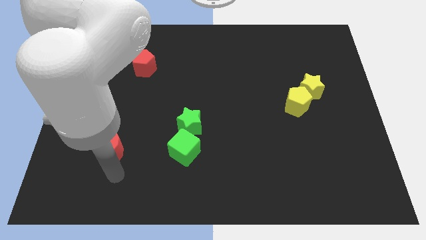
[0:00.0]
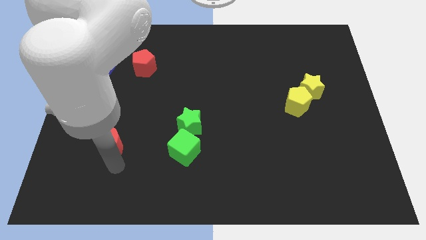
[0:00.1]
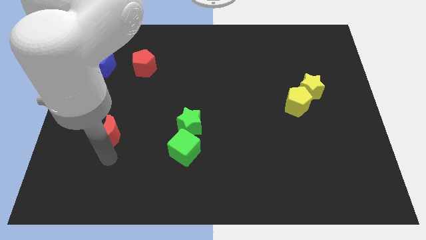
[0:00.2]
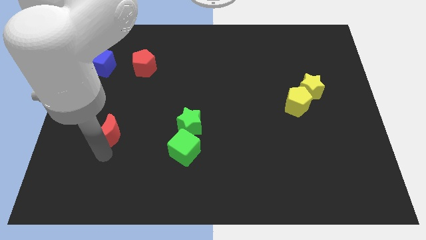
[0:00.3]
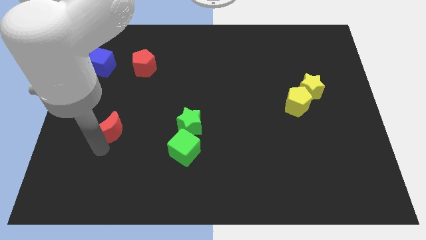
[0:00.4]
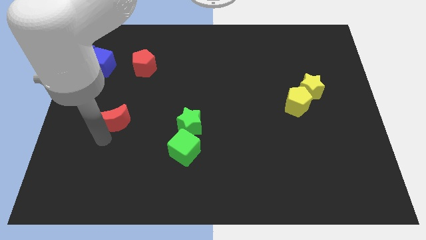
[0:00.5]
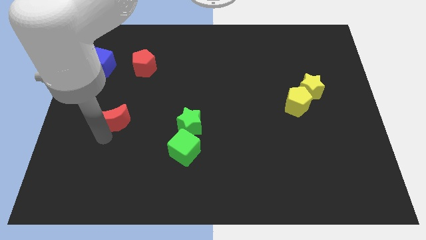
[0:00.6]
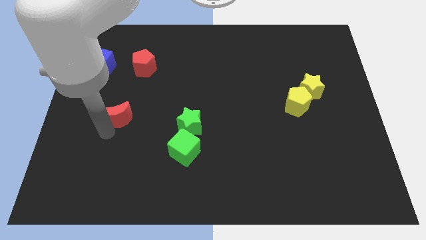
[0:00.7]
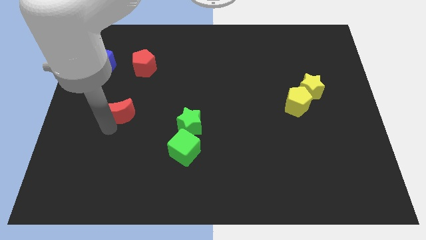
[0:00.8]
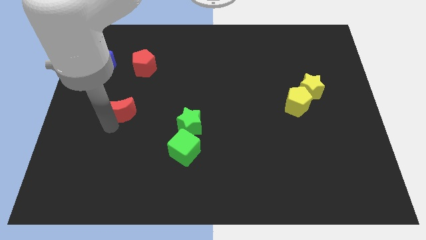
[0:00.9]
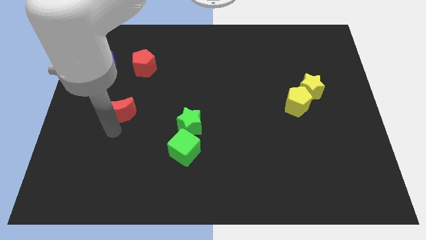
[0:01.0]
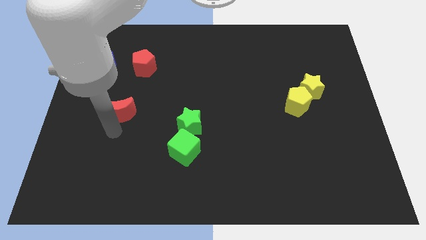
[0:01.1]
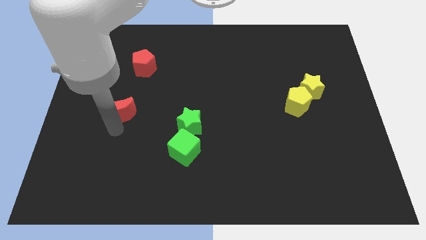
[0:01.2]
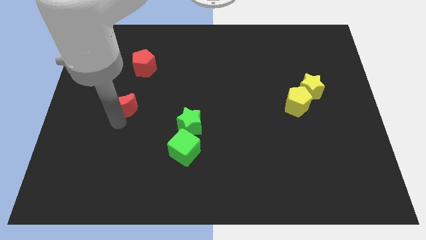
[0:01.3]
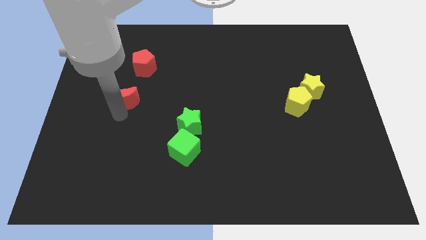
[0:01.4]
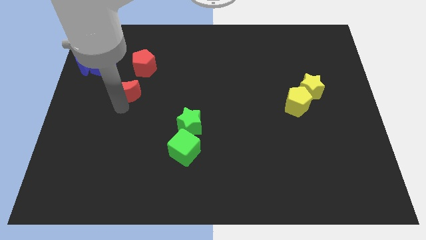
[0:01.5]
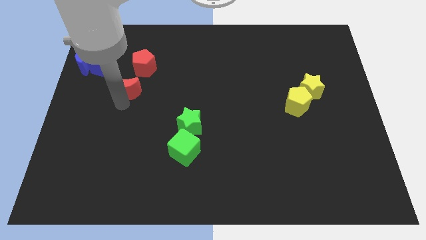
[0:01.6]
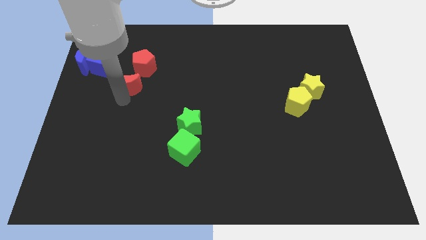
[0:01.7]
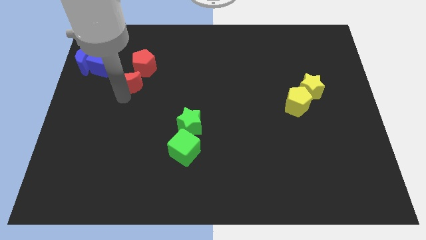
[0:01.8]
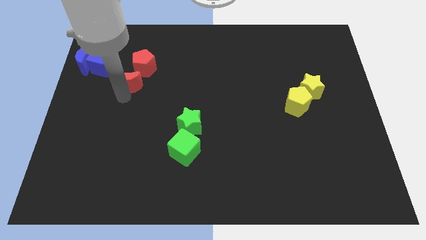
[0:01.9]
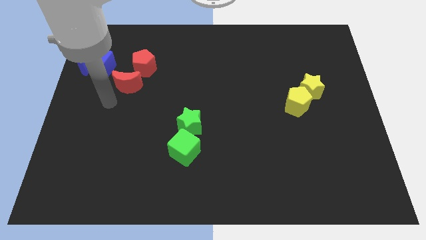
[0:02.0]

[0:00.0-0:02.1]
push the red crescent towards the left bottom of the red pentagon

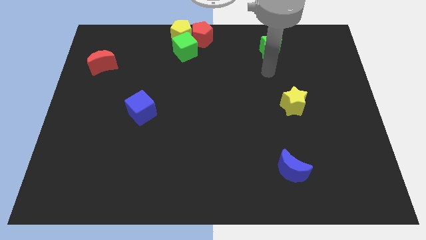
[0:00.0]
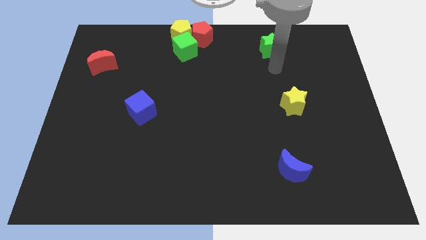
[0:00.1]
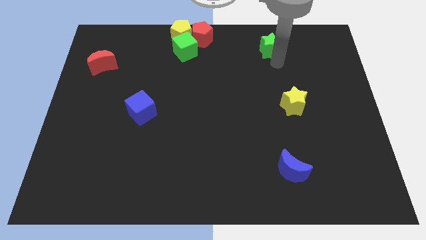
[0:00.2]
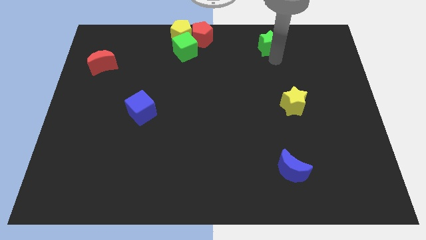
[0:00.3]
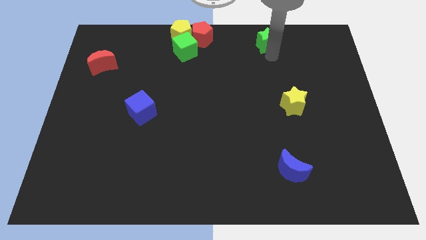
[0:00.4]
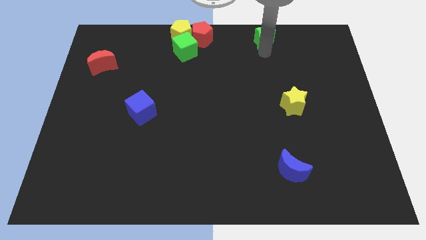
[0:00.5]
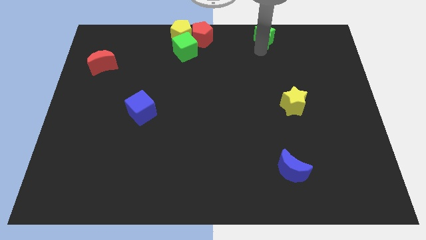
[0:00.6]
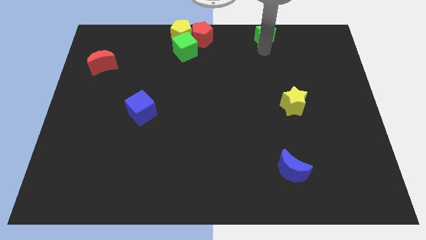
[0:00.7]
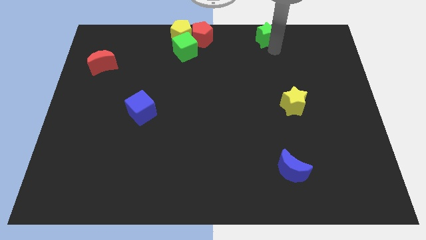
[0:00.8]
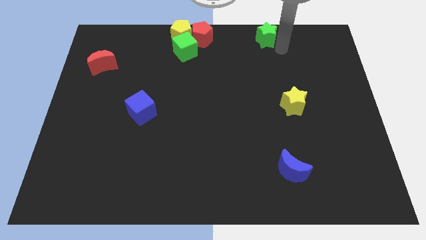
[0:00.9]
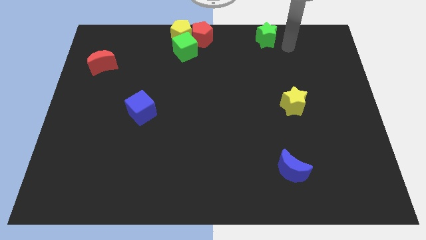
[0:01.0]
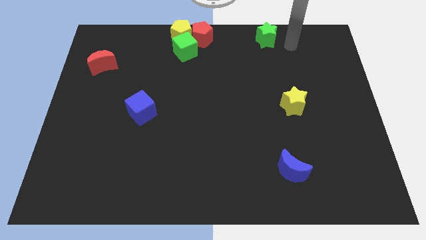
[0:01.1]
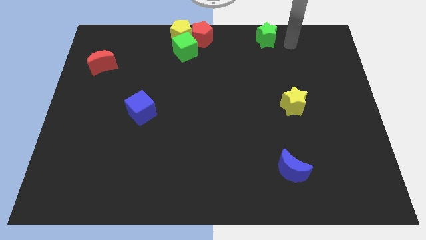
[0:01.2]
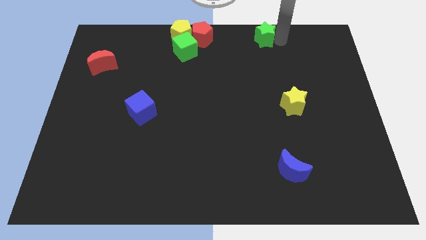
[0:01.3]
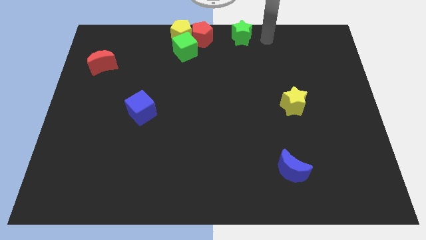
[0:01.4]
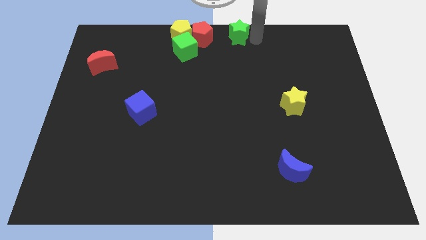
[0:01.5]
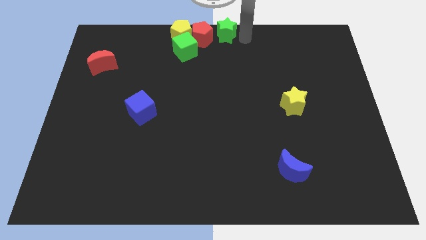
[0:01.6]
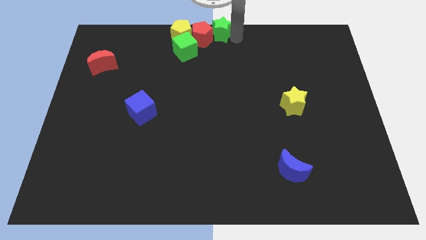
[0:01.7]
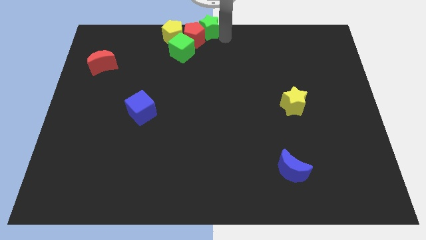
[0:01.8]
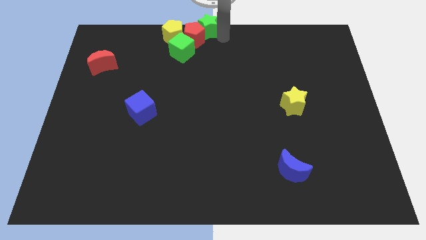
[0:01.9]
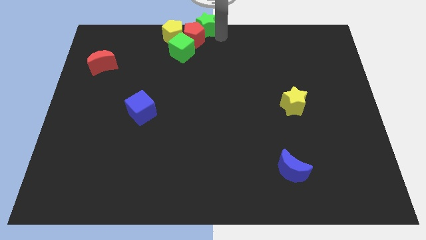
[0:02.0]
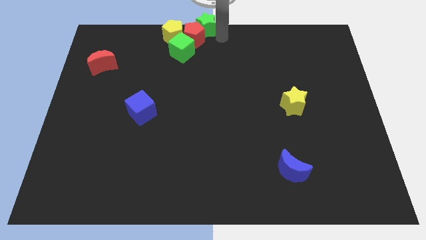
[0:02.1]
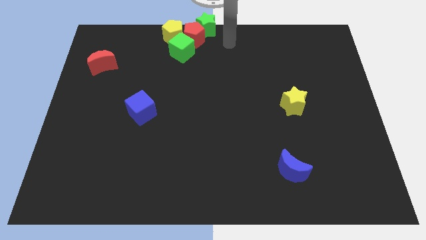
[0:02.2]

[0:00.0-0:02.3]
move green star at the top center of board

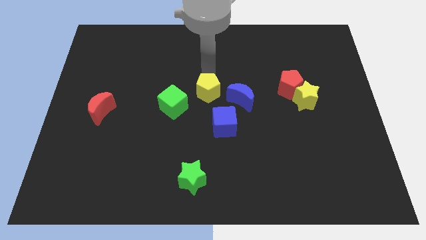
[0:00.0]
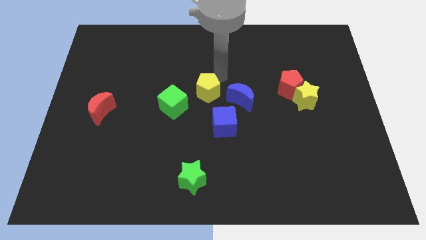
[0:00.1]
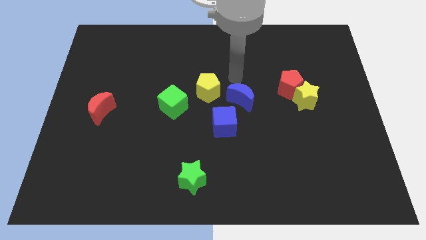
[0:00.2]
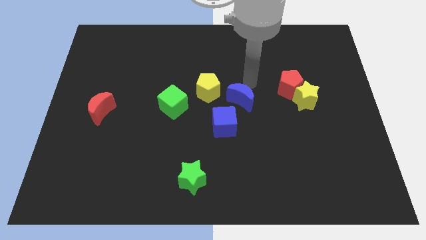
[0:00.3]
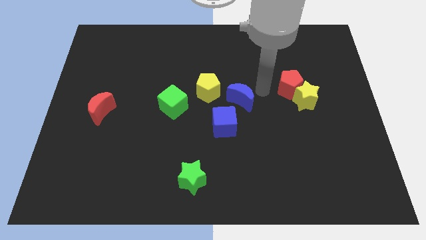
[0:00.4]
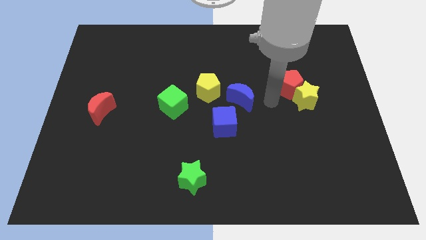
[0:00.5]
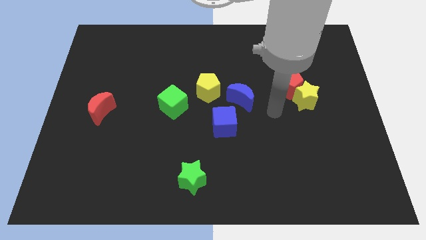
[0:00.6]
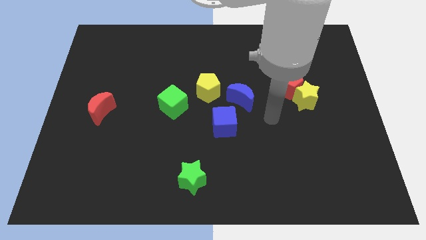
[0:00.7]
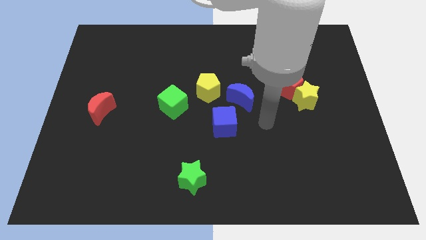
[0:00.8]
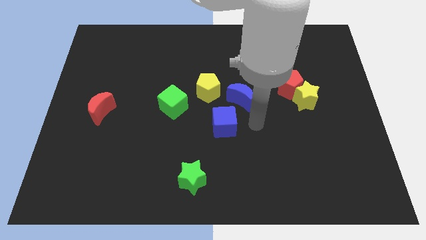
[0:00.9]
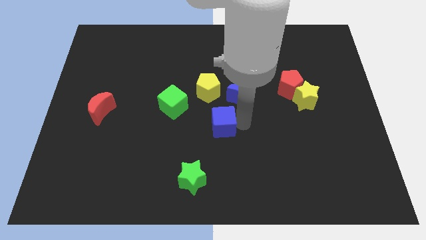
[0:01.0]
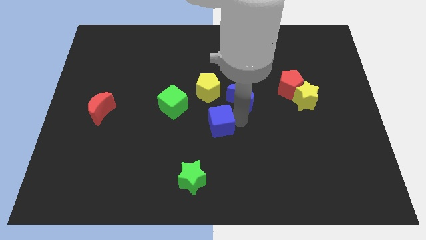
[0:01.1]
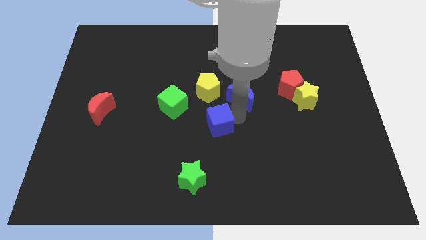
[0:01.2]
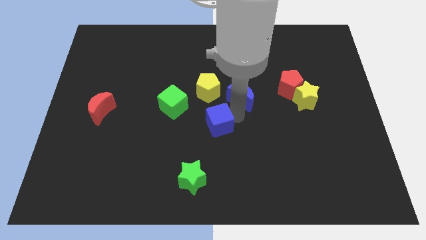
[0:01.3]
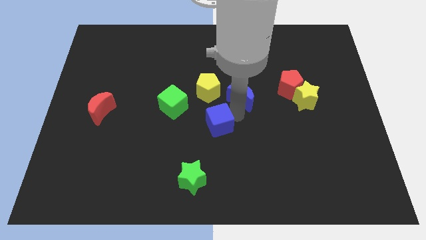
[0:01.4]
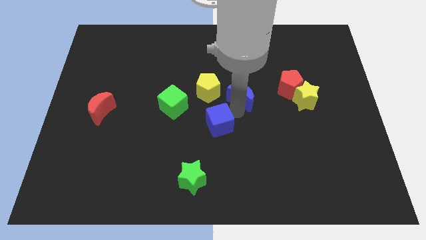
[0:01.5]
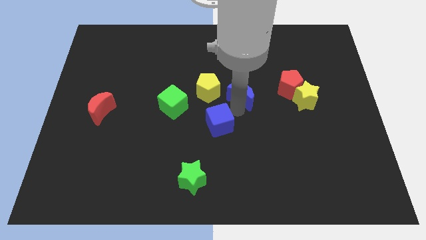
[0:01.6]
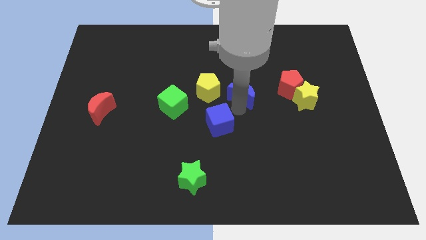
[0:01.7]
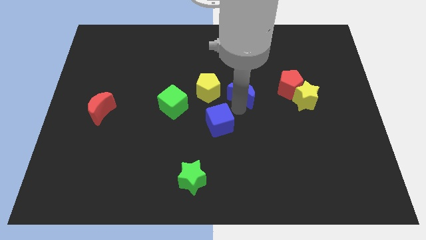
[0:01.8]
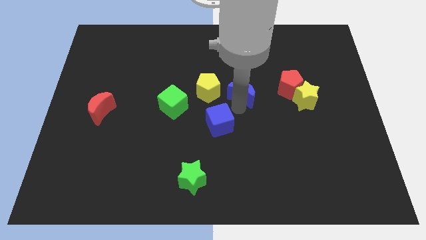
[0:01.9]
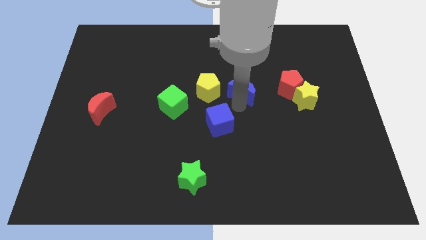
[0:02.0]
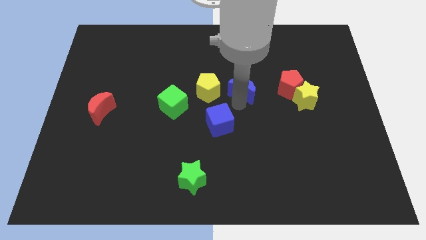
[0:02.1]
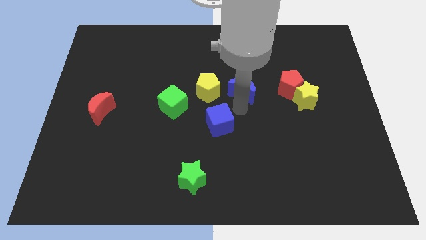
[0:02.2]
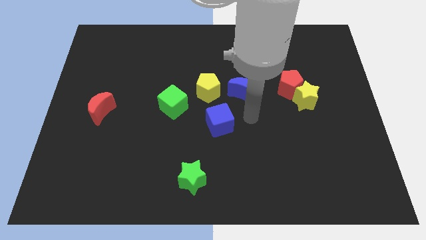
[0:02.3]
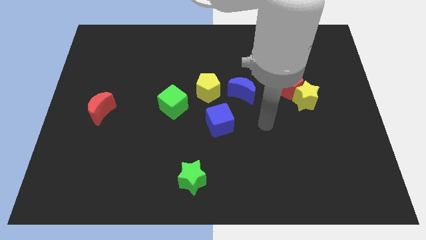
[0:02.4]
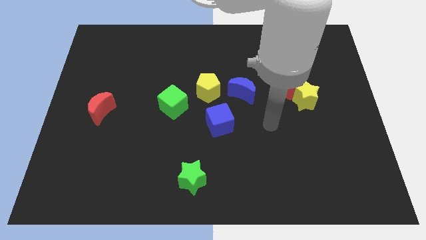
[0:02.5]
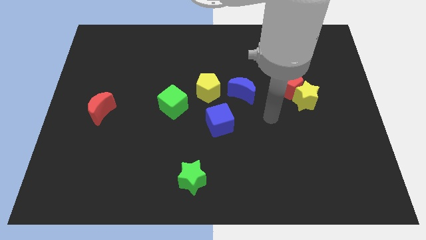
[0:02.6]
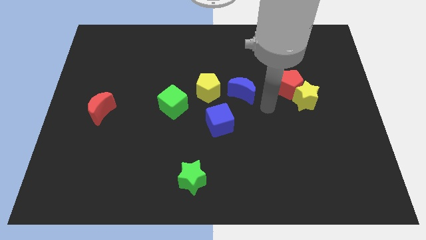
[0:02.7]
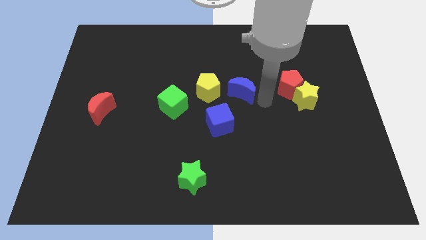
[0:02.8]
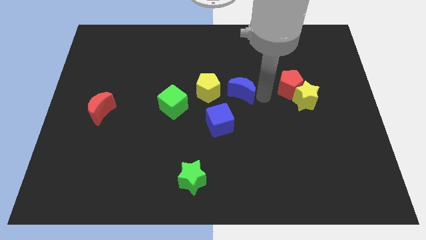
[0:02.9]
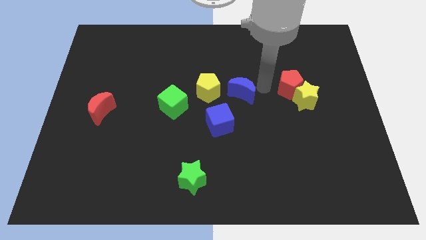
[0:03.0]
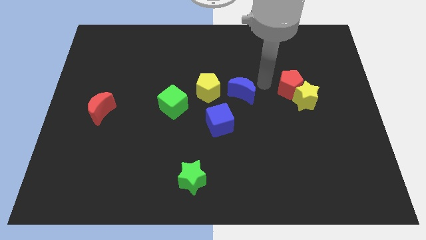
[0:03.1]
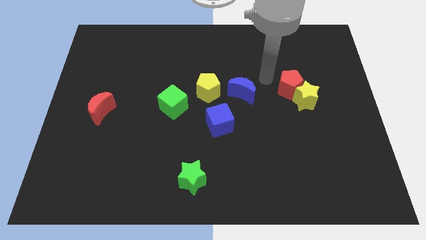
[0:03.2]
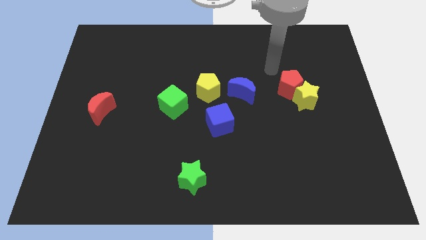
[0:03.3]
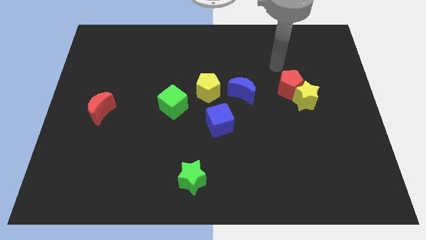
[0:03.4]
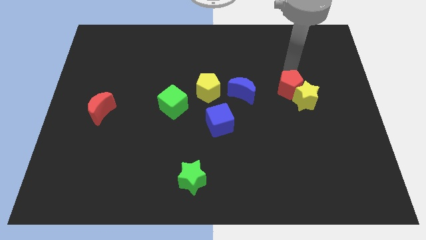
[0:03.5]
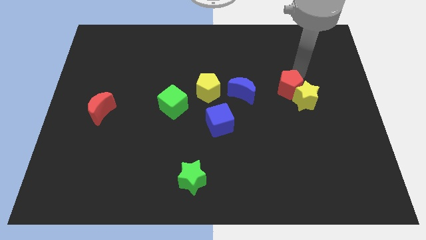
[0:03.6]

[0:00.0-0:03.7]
slightly push the blue crescent upwards

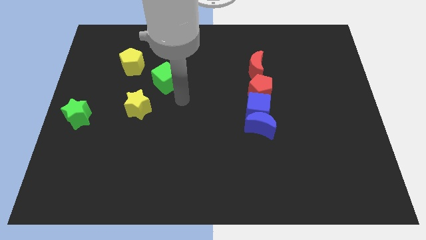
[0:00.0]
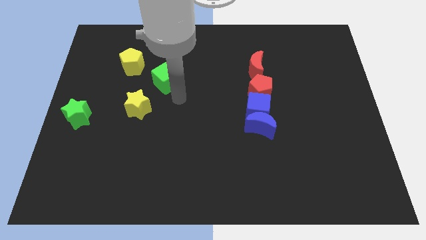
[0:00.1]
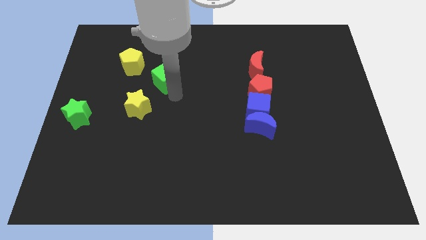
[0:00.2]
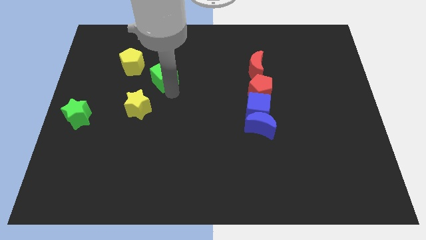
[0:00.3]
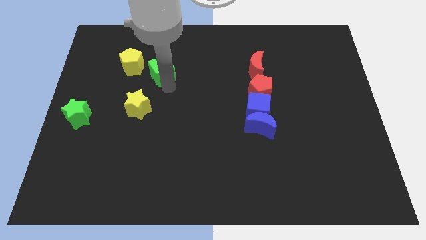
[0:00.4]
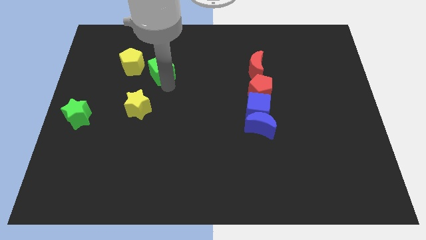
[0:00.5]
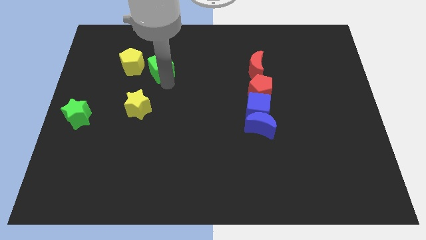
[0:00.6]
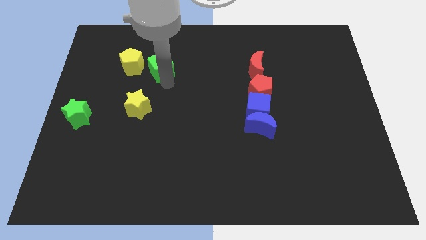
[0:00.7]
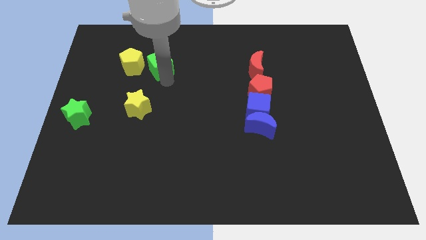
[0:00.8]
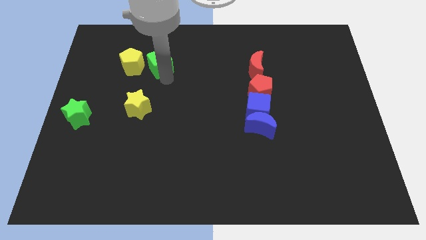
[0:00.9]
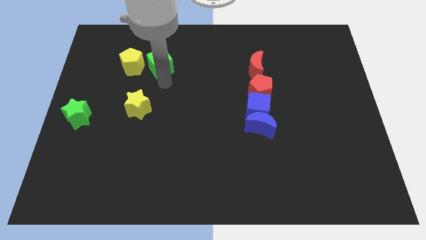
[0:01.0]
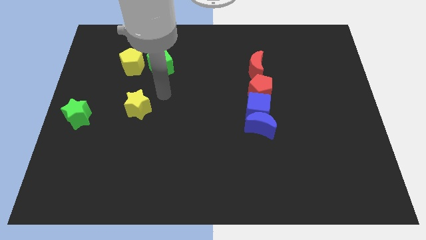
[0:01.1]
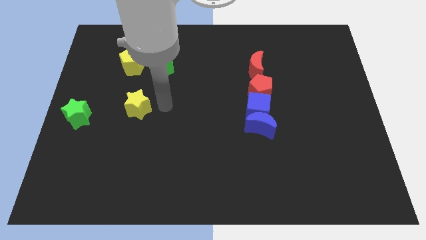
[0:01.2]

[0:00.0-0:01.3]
move the green cube slightly to the top
